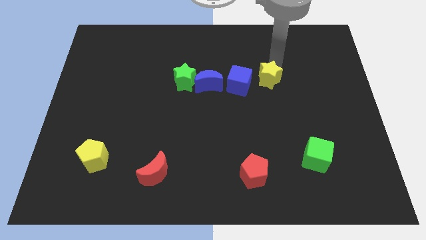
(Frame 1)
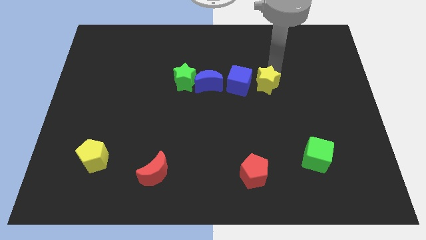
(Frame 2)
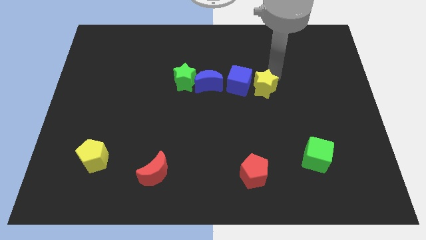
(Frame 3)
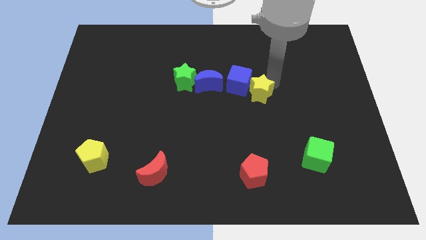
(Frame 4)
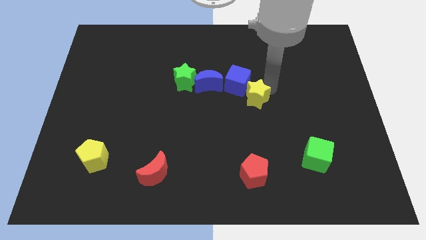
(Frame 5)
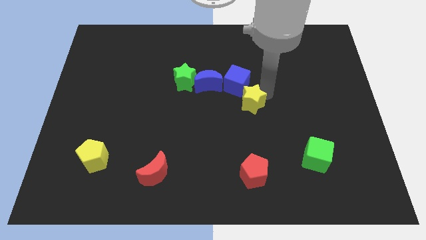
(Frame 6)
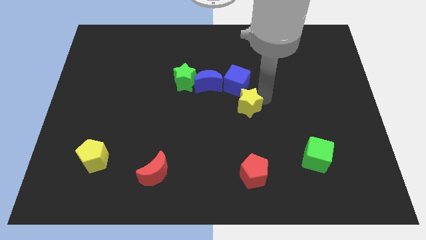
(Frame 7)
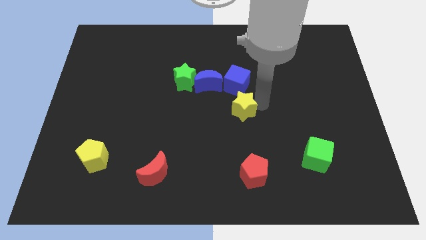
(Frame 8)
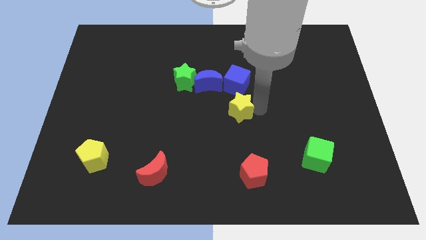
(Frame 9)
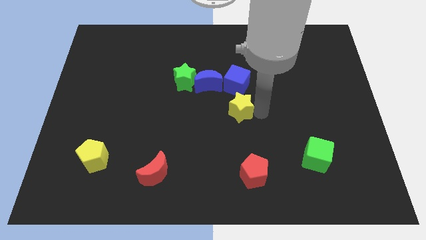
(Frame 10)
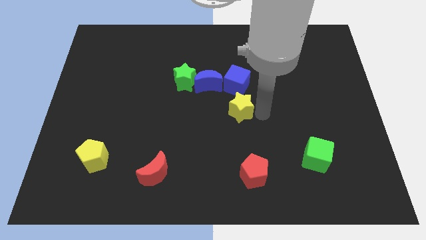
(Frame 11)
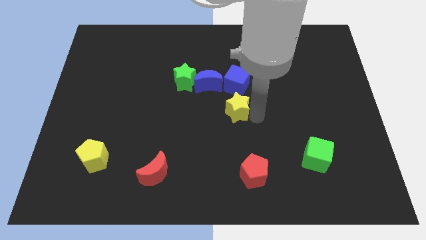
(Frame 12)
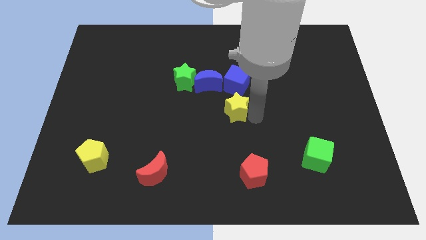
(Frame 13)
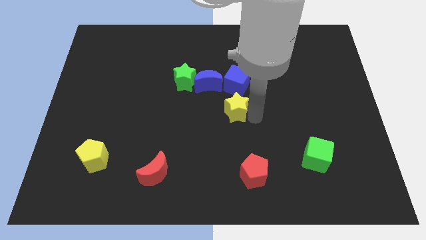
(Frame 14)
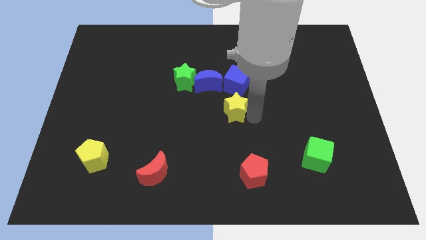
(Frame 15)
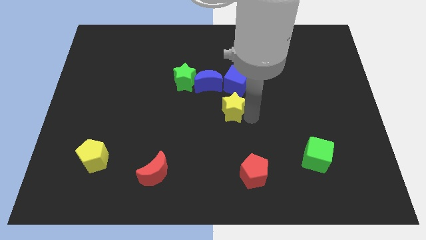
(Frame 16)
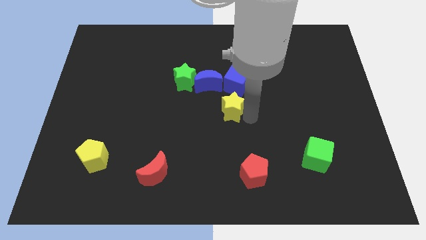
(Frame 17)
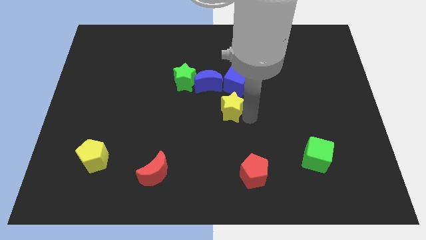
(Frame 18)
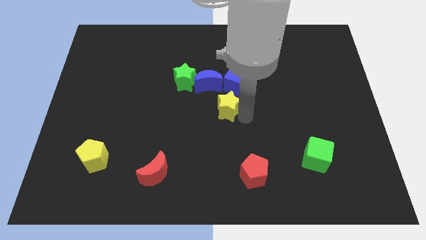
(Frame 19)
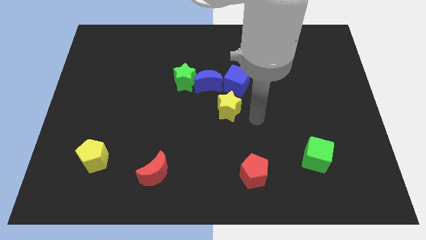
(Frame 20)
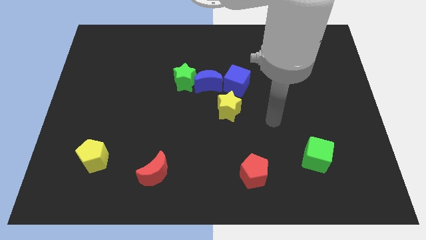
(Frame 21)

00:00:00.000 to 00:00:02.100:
slide the yellow star to the center of the board

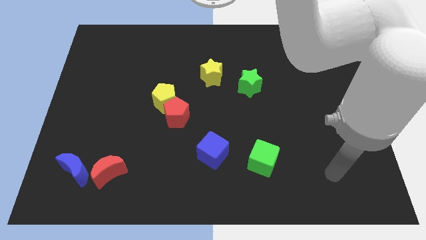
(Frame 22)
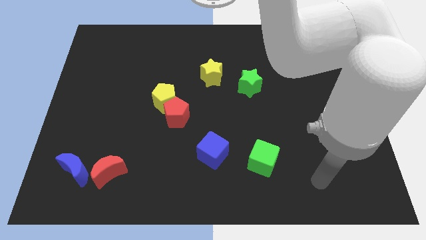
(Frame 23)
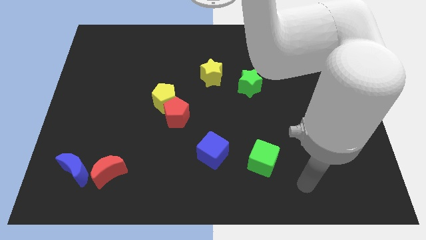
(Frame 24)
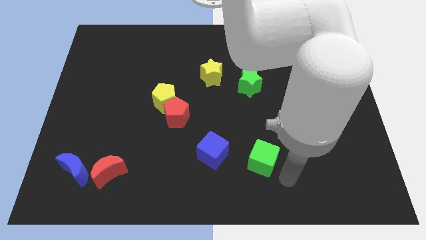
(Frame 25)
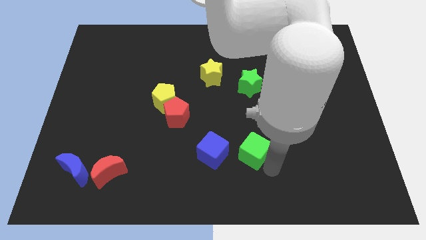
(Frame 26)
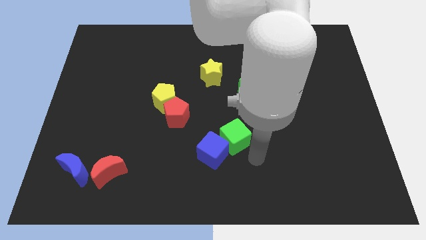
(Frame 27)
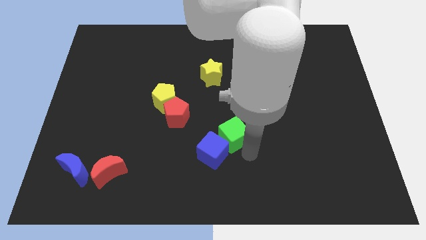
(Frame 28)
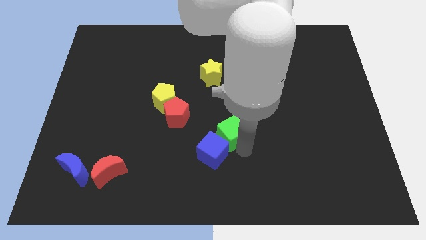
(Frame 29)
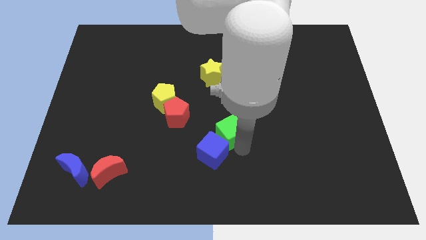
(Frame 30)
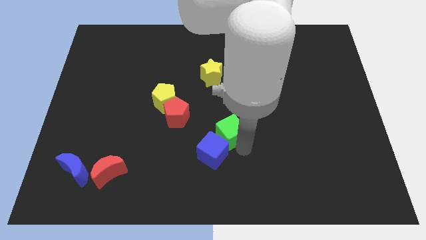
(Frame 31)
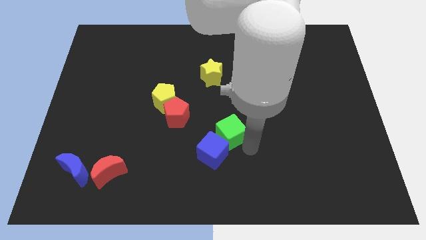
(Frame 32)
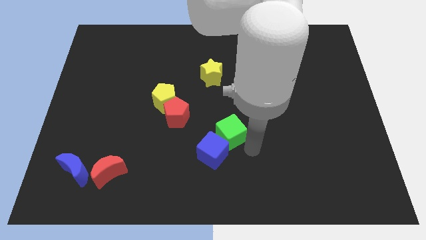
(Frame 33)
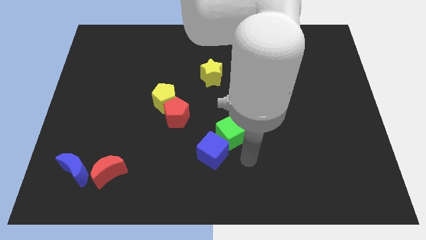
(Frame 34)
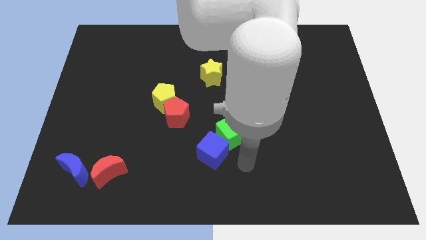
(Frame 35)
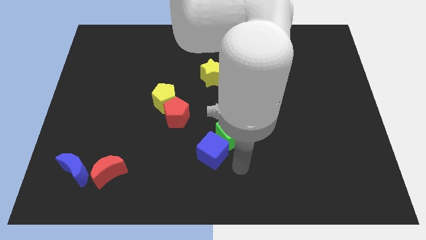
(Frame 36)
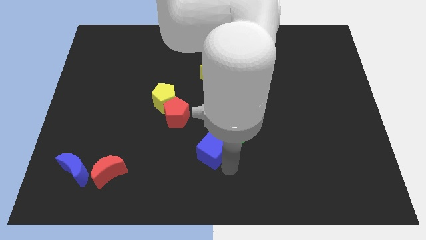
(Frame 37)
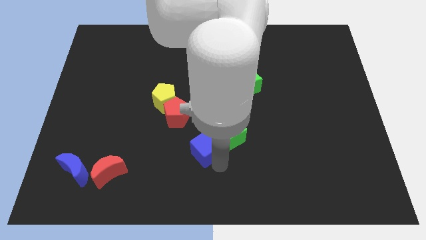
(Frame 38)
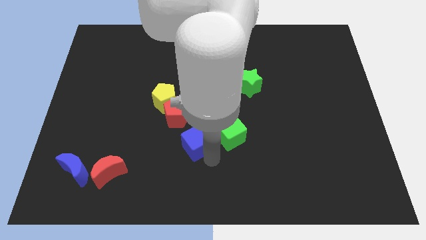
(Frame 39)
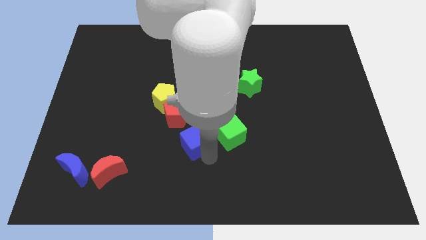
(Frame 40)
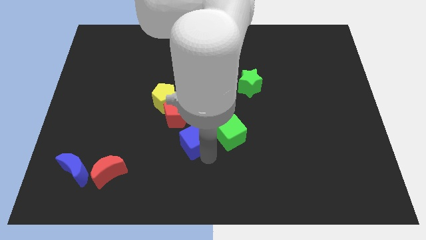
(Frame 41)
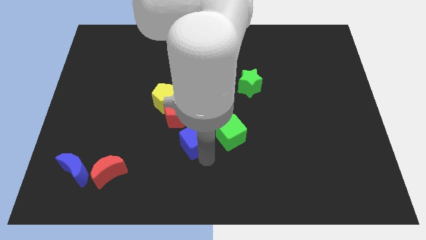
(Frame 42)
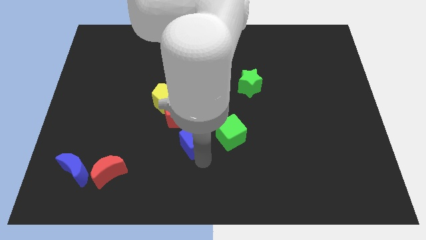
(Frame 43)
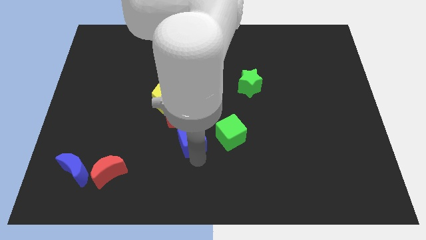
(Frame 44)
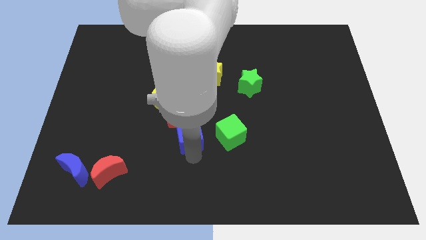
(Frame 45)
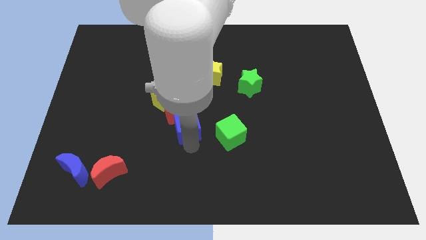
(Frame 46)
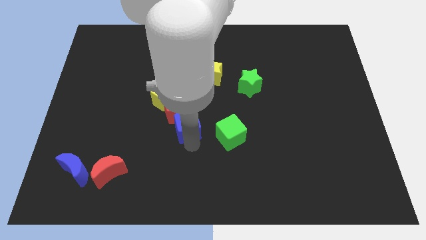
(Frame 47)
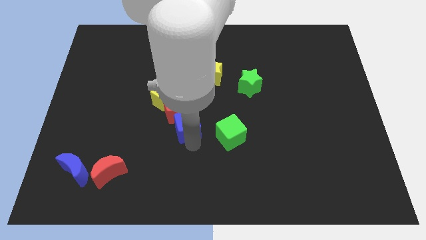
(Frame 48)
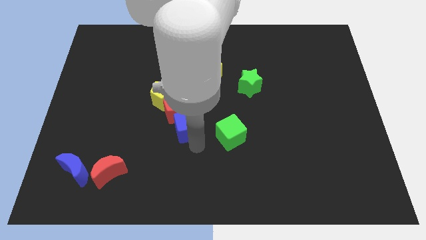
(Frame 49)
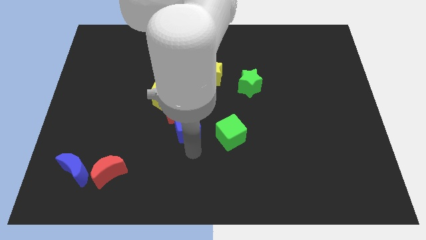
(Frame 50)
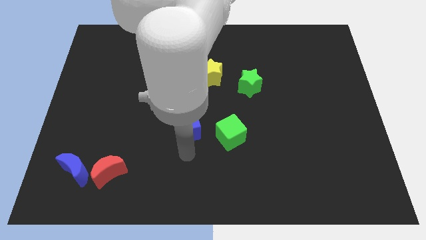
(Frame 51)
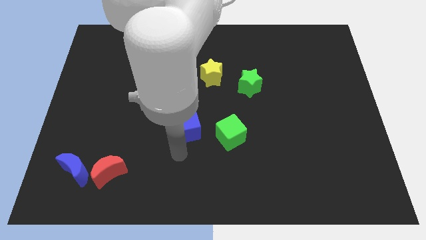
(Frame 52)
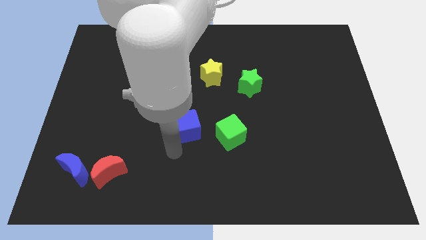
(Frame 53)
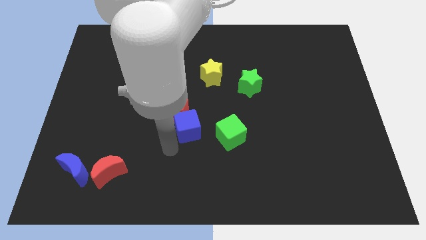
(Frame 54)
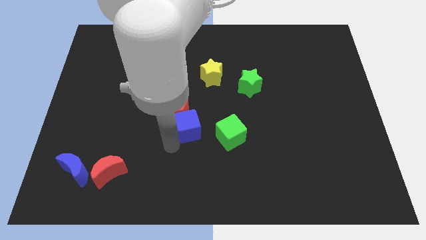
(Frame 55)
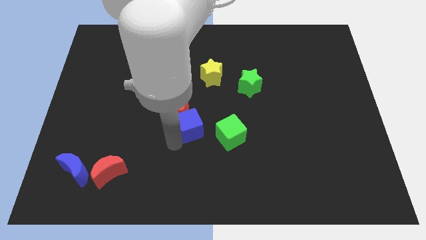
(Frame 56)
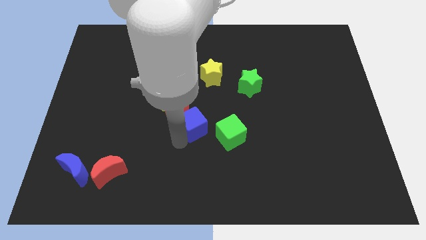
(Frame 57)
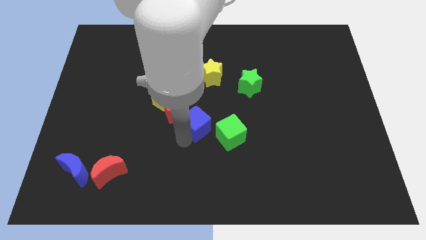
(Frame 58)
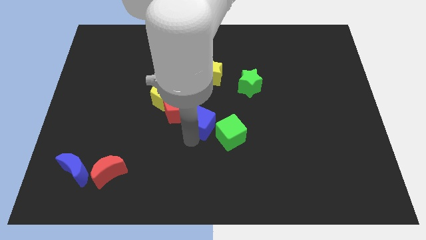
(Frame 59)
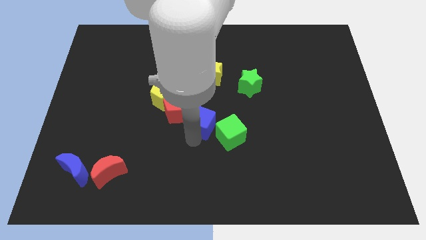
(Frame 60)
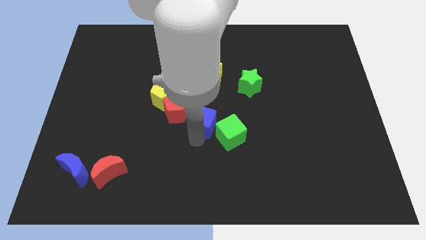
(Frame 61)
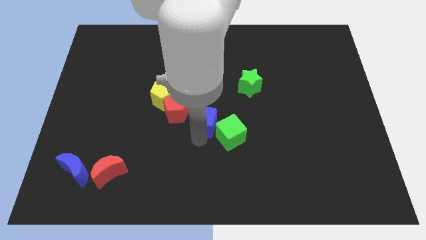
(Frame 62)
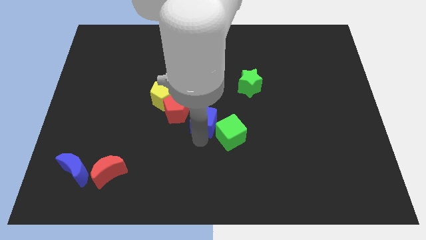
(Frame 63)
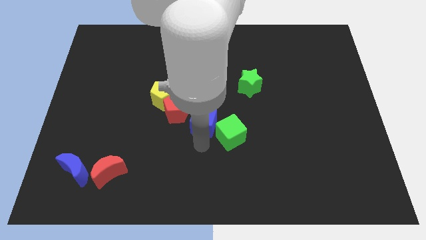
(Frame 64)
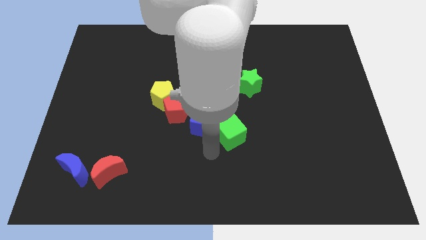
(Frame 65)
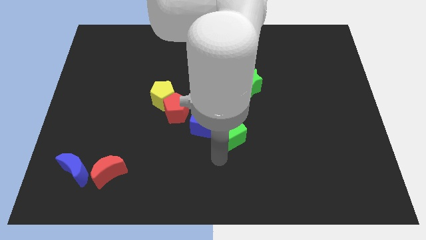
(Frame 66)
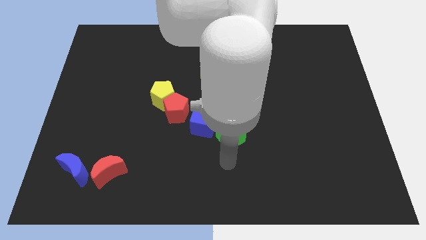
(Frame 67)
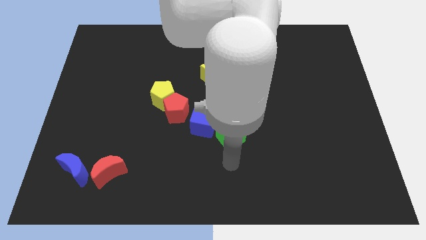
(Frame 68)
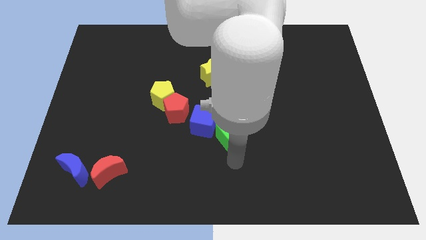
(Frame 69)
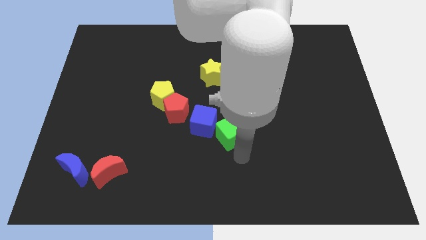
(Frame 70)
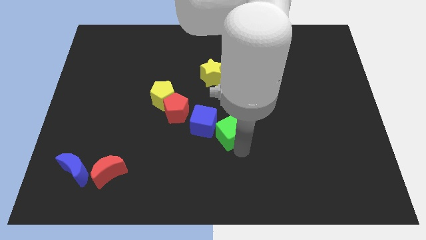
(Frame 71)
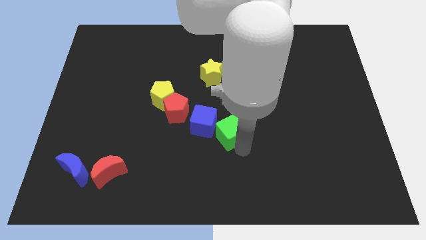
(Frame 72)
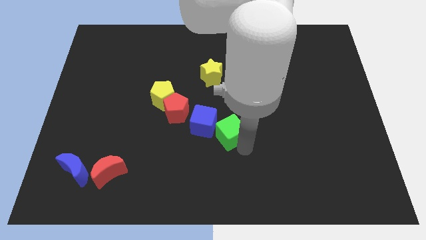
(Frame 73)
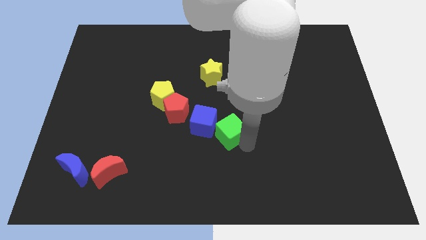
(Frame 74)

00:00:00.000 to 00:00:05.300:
drag the blue cube between the green cube and red pentagon

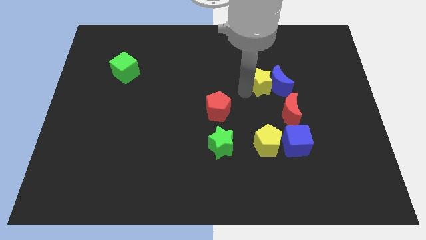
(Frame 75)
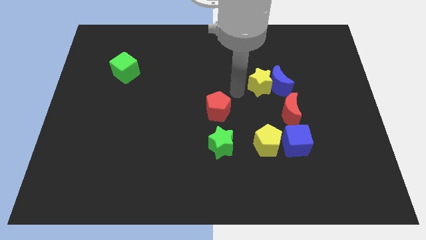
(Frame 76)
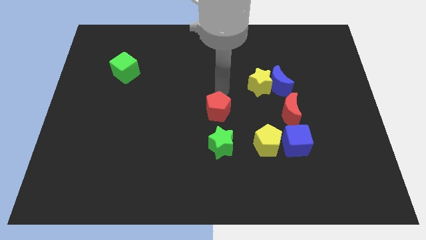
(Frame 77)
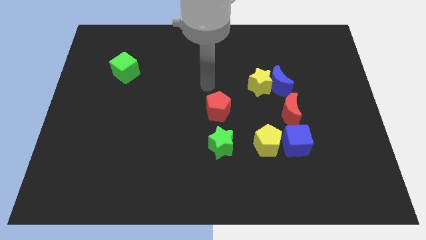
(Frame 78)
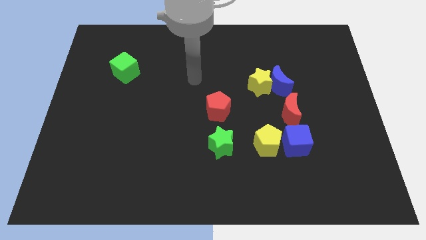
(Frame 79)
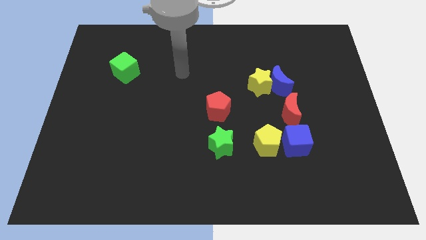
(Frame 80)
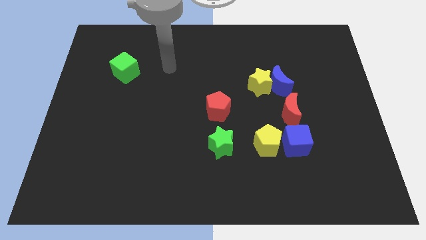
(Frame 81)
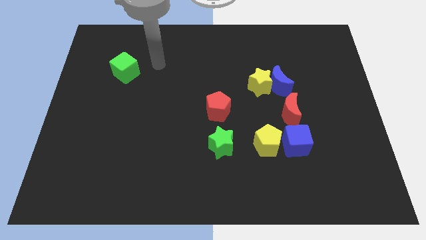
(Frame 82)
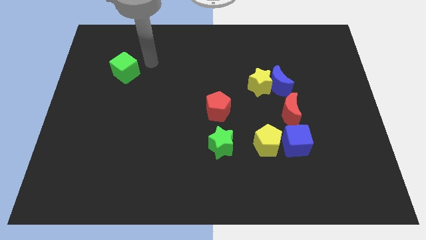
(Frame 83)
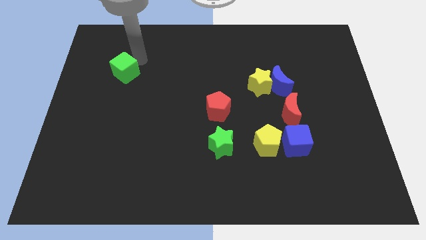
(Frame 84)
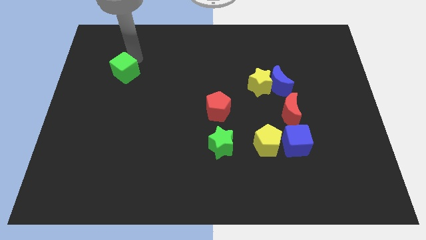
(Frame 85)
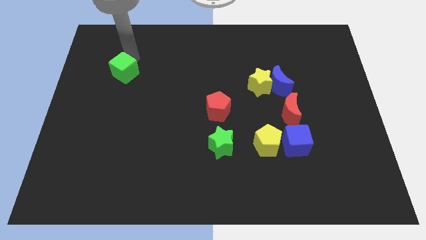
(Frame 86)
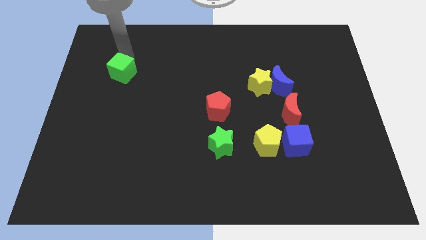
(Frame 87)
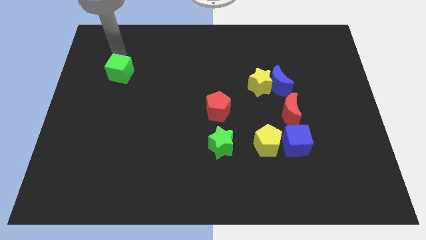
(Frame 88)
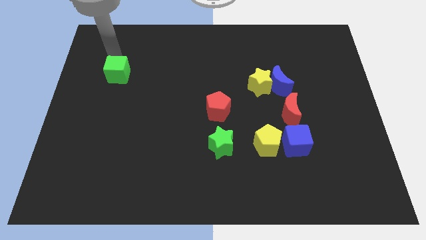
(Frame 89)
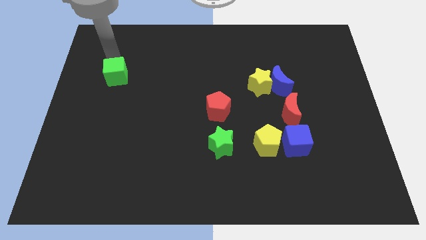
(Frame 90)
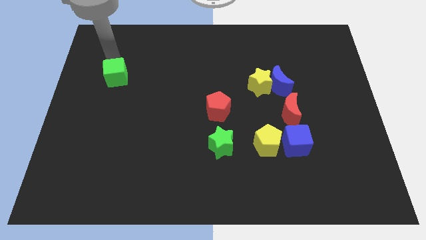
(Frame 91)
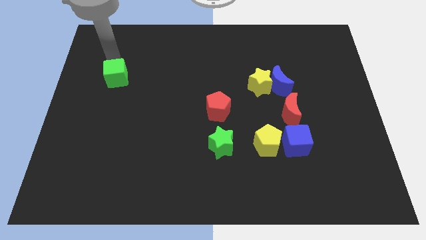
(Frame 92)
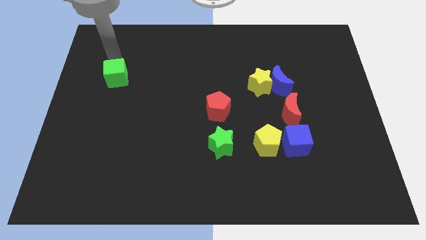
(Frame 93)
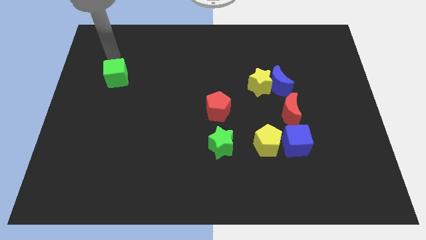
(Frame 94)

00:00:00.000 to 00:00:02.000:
move your arm into the green cube
